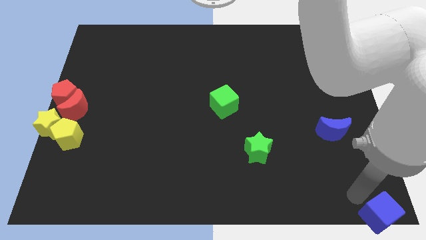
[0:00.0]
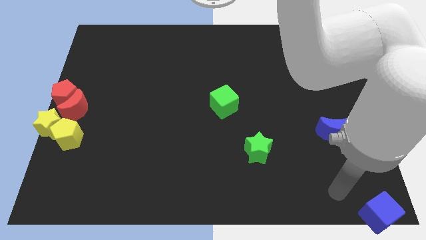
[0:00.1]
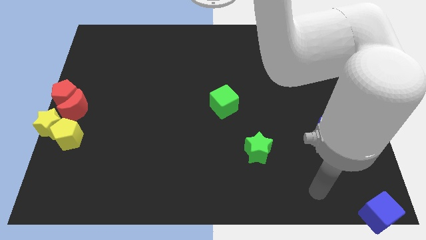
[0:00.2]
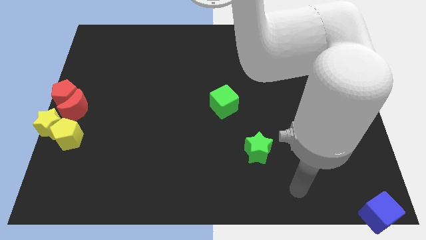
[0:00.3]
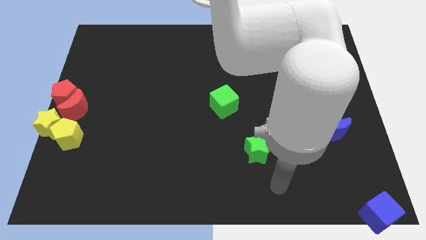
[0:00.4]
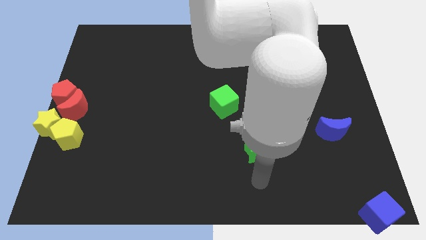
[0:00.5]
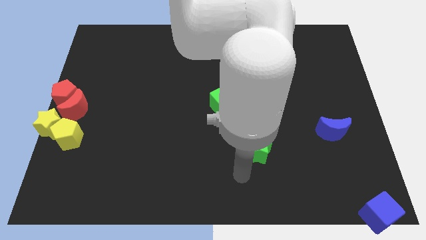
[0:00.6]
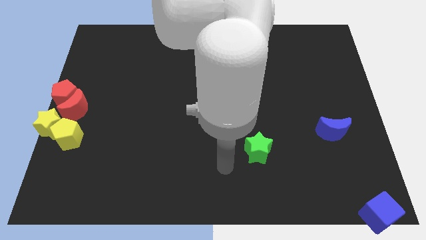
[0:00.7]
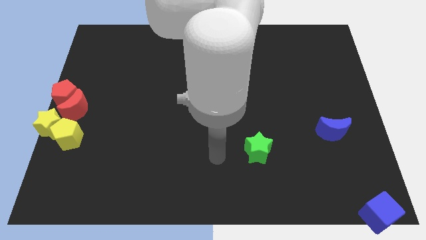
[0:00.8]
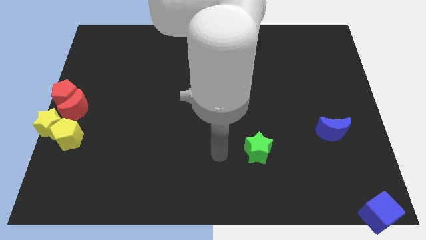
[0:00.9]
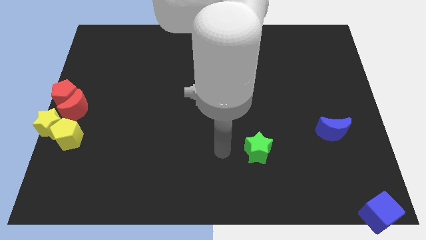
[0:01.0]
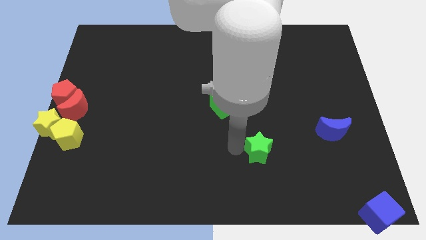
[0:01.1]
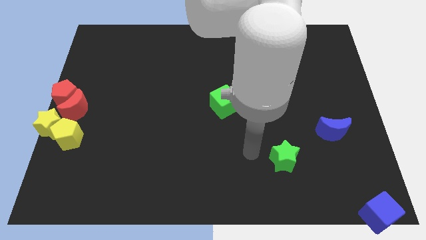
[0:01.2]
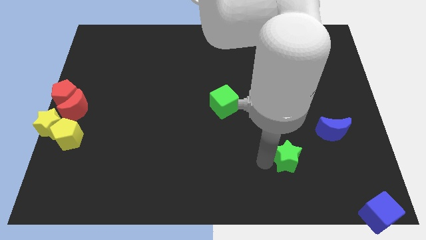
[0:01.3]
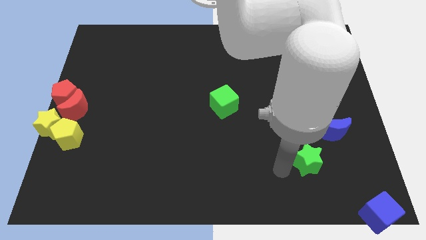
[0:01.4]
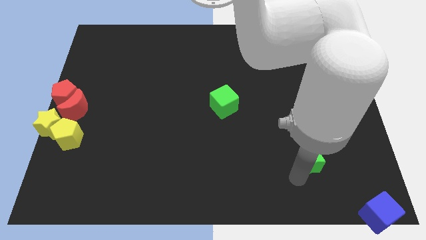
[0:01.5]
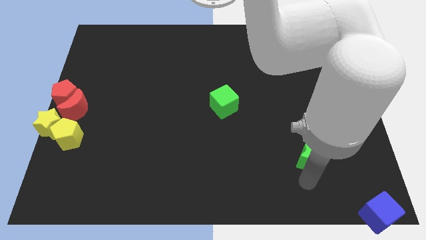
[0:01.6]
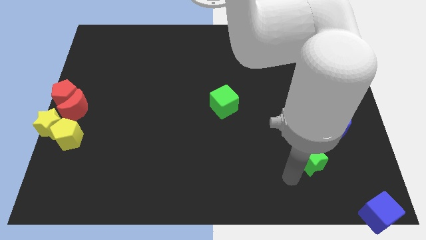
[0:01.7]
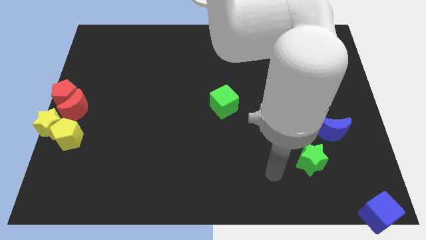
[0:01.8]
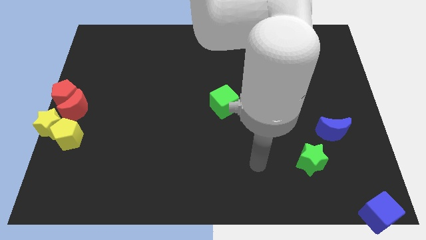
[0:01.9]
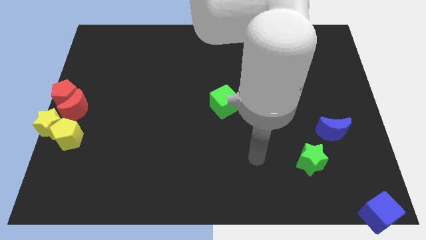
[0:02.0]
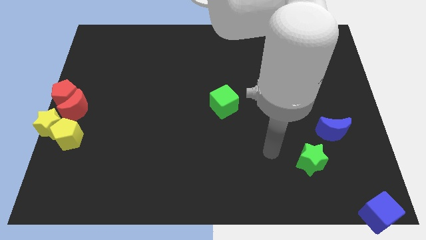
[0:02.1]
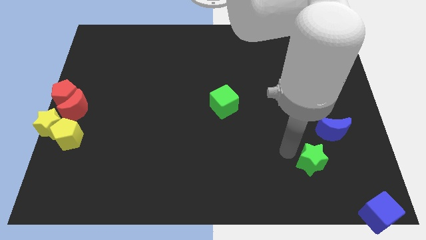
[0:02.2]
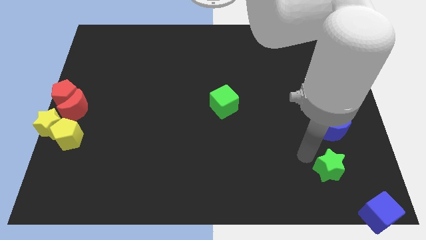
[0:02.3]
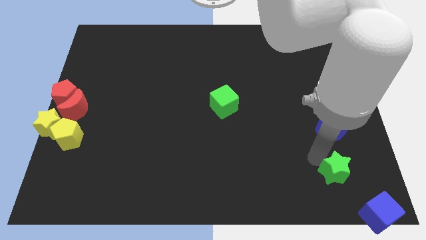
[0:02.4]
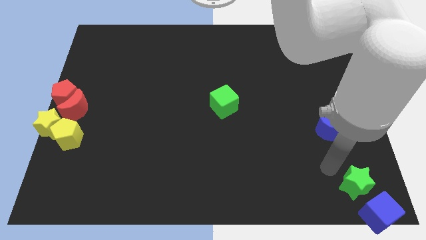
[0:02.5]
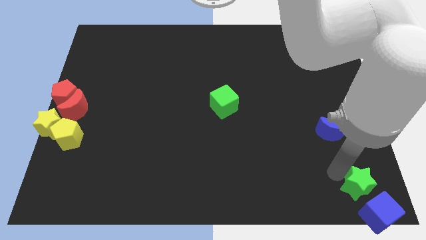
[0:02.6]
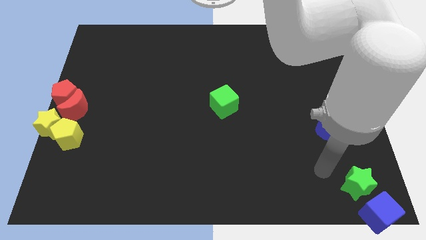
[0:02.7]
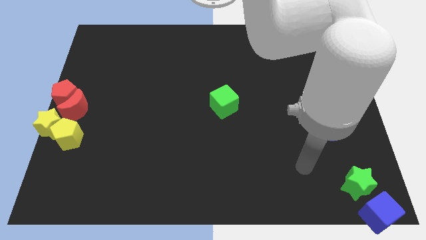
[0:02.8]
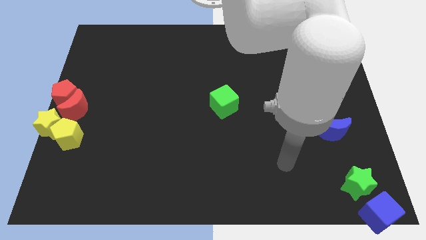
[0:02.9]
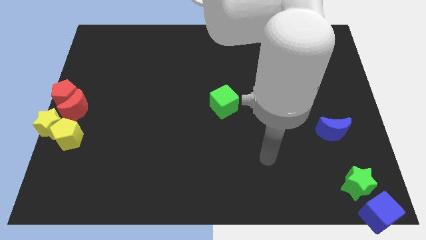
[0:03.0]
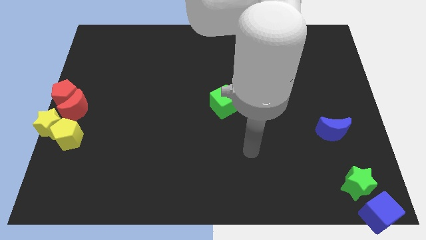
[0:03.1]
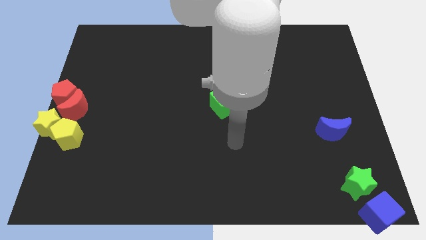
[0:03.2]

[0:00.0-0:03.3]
push the green star close to the blue cube

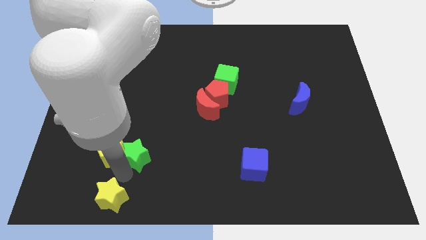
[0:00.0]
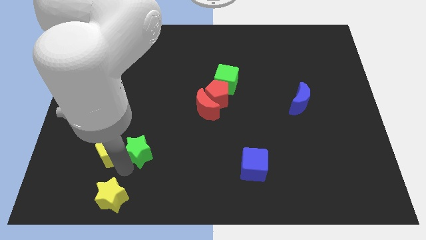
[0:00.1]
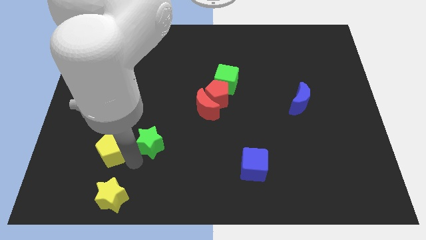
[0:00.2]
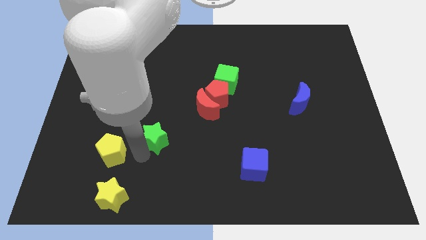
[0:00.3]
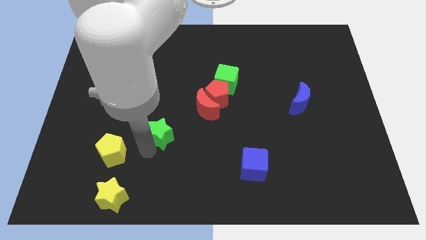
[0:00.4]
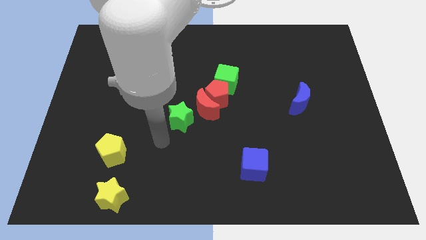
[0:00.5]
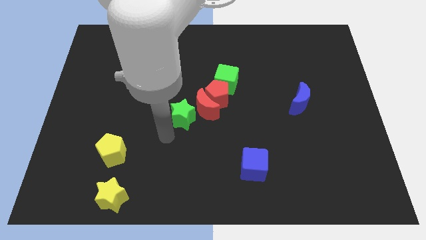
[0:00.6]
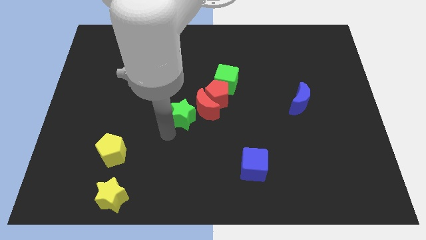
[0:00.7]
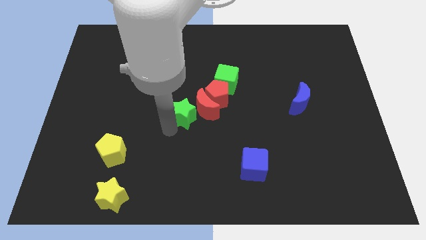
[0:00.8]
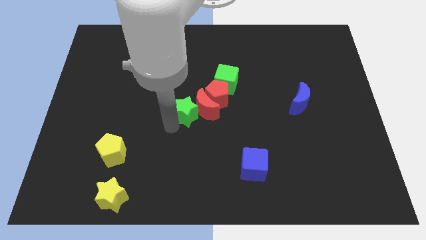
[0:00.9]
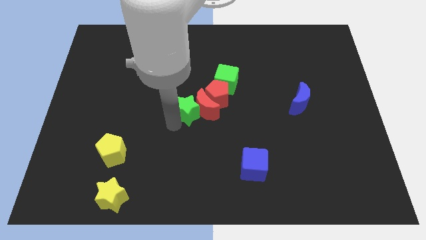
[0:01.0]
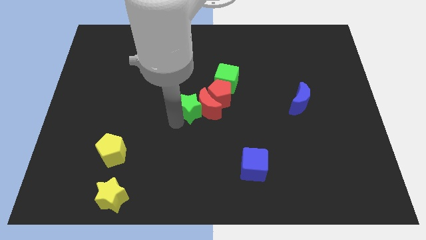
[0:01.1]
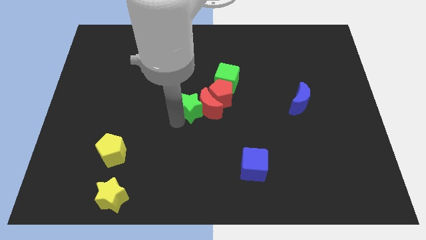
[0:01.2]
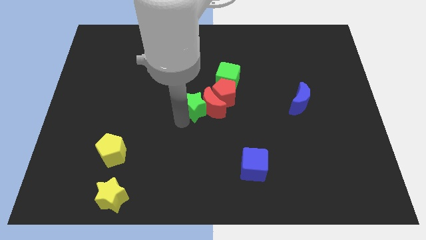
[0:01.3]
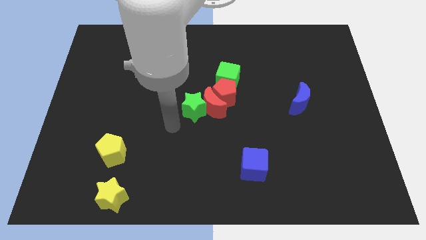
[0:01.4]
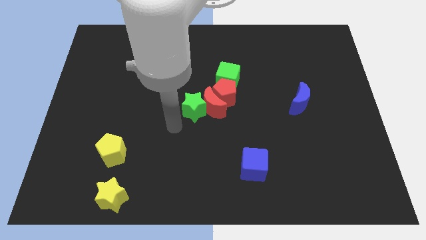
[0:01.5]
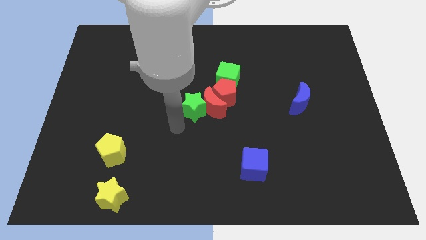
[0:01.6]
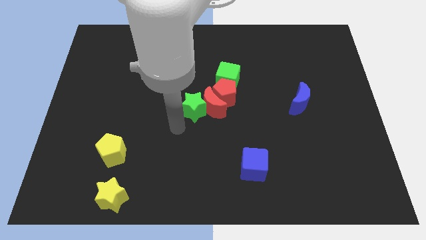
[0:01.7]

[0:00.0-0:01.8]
place green star beside red crescent

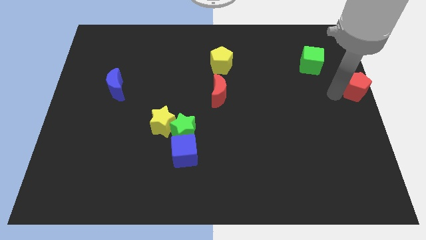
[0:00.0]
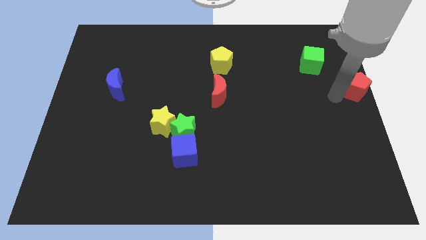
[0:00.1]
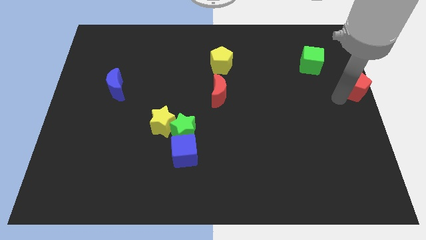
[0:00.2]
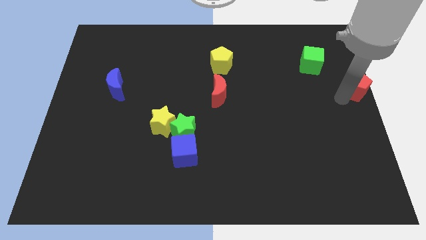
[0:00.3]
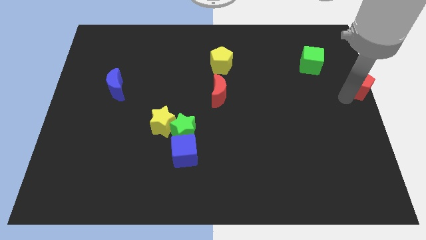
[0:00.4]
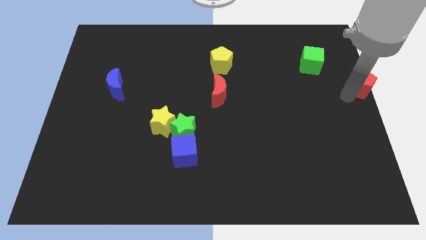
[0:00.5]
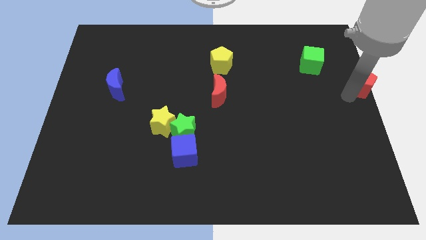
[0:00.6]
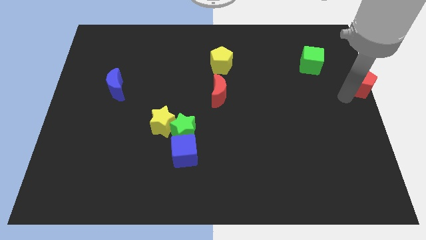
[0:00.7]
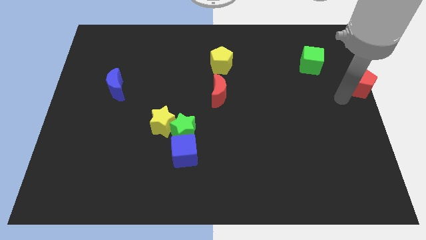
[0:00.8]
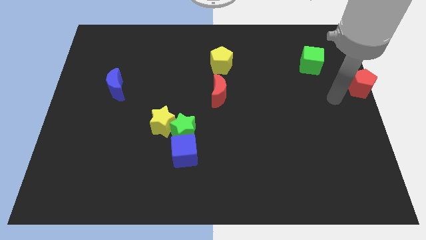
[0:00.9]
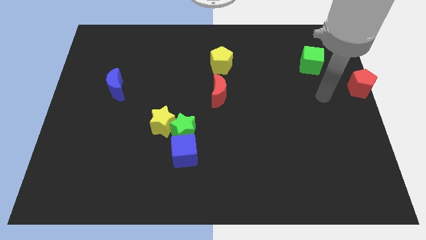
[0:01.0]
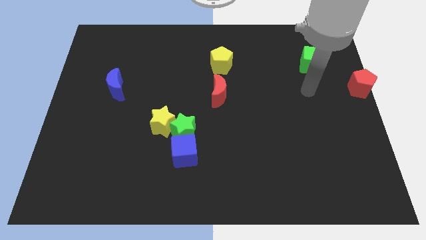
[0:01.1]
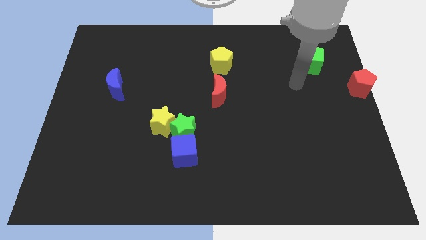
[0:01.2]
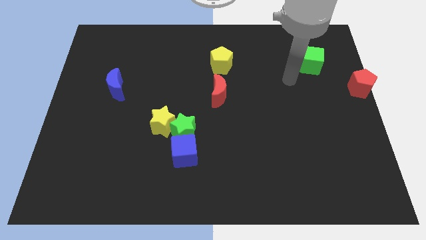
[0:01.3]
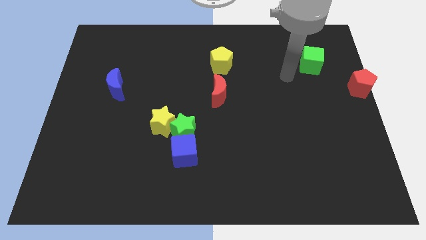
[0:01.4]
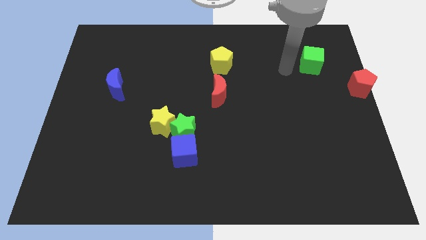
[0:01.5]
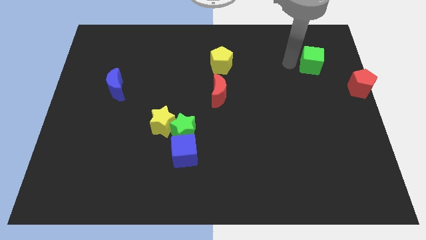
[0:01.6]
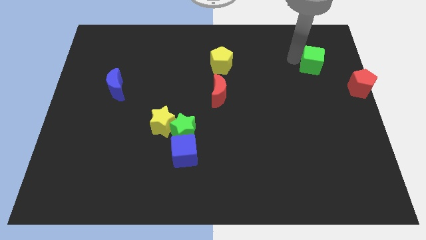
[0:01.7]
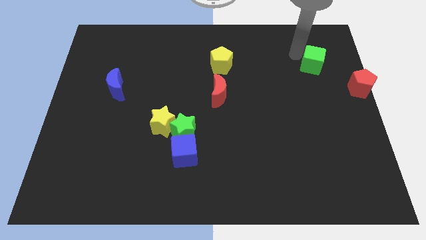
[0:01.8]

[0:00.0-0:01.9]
move your arm towards the green cube

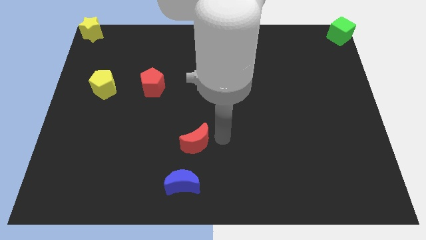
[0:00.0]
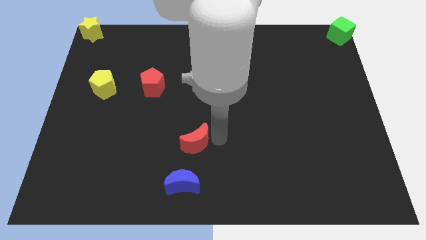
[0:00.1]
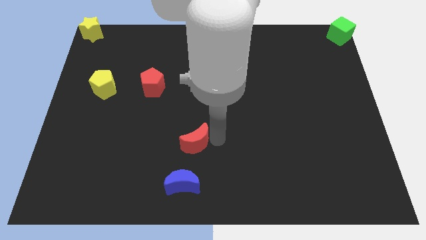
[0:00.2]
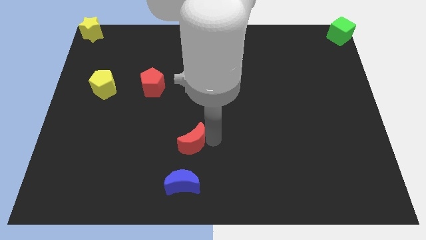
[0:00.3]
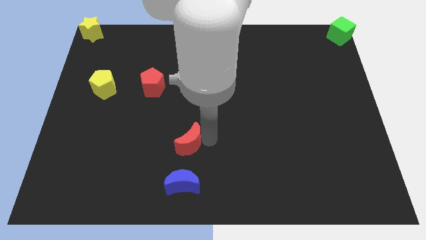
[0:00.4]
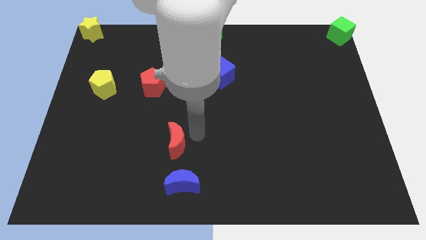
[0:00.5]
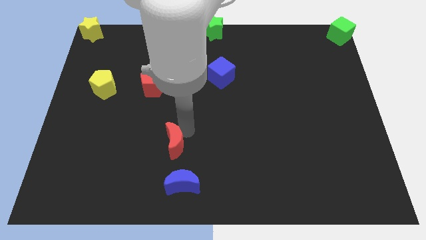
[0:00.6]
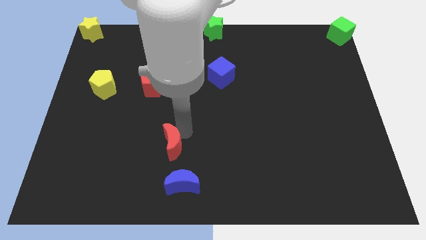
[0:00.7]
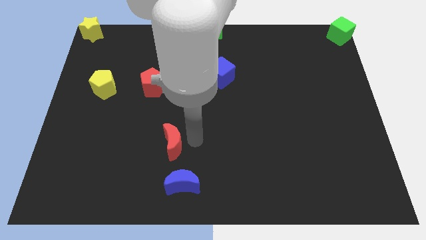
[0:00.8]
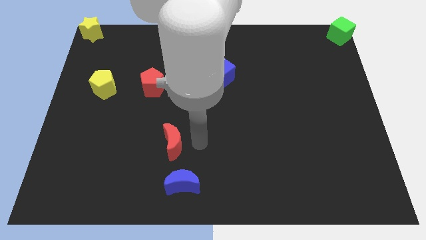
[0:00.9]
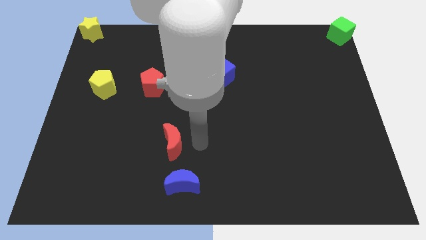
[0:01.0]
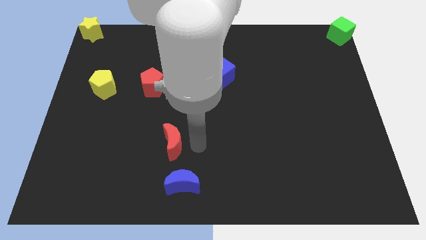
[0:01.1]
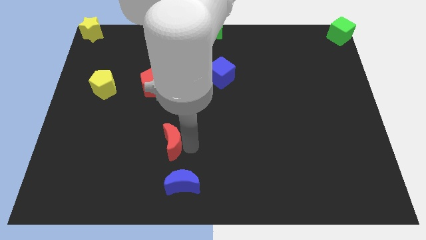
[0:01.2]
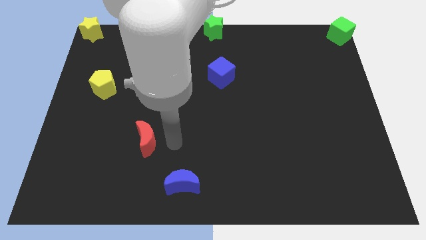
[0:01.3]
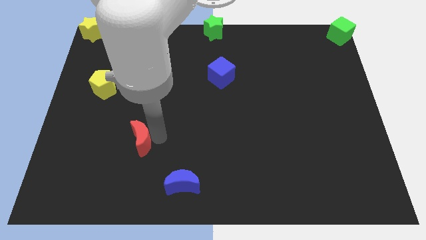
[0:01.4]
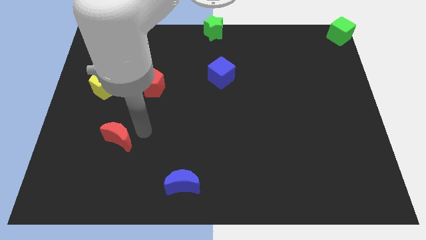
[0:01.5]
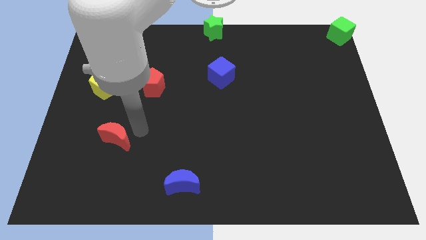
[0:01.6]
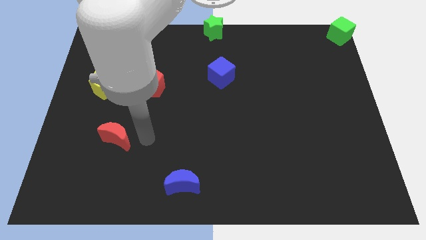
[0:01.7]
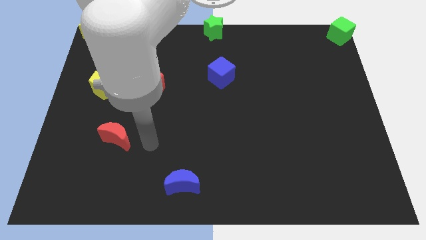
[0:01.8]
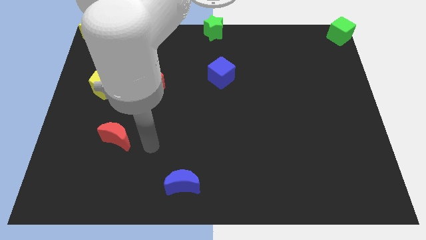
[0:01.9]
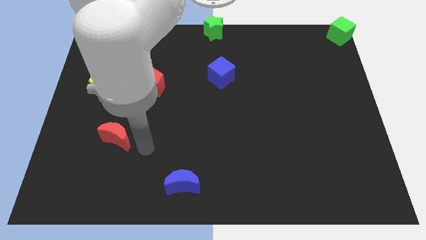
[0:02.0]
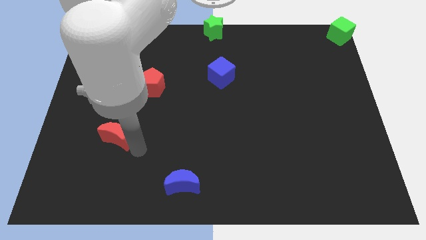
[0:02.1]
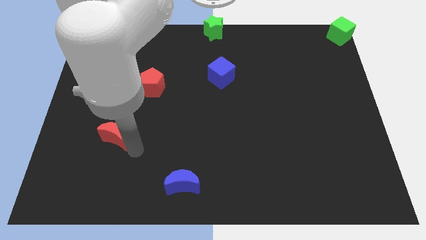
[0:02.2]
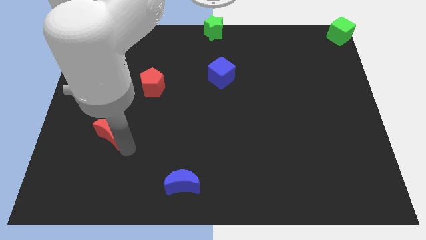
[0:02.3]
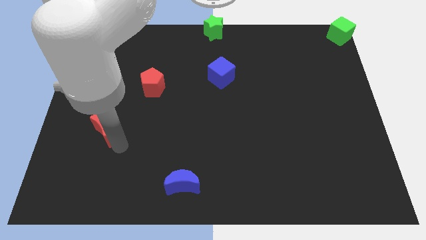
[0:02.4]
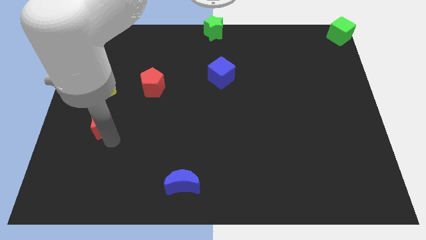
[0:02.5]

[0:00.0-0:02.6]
push red crescent below yellow pentagon
